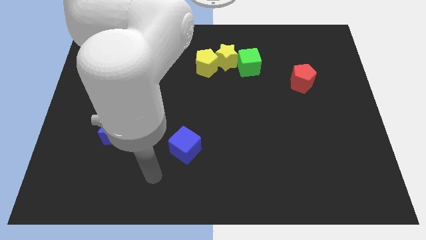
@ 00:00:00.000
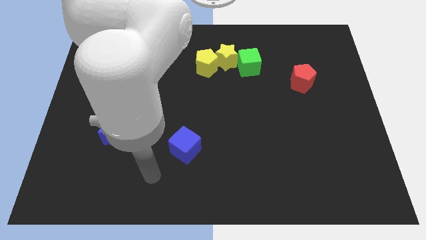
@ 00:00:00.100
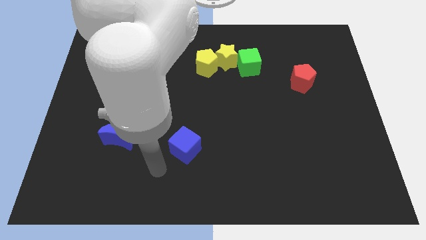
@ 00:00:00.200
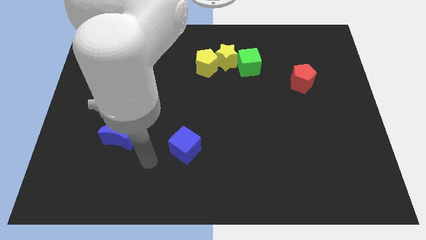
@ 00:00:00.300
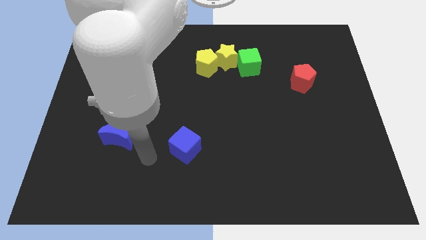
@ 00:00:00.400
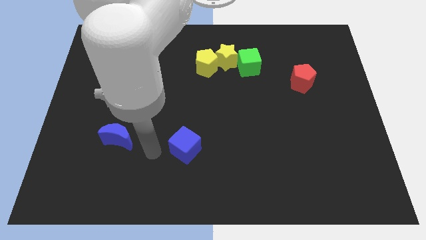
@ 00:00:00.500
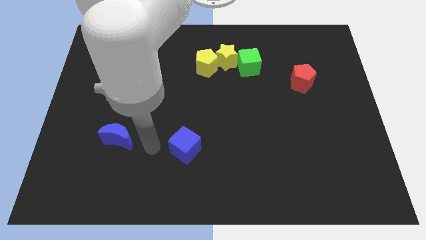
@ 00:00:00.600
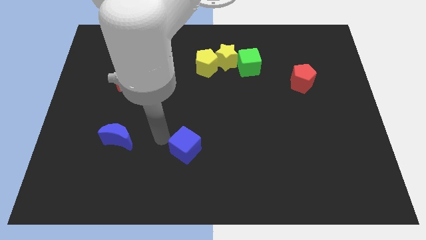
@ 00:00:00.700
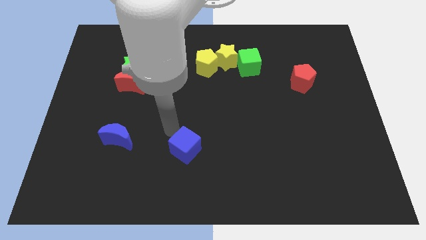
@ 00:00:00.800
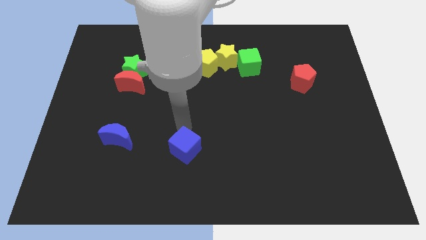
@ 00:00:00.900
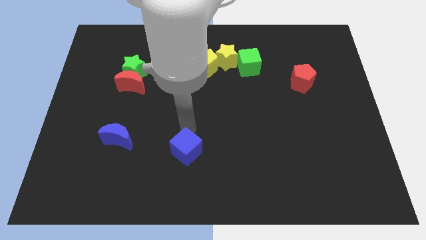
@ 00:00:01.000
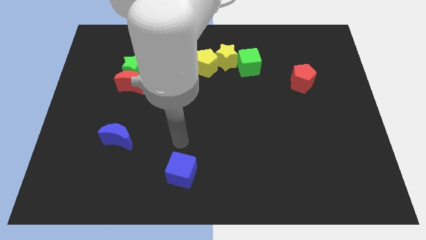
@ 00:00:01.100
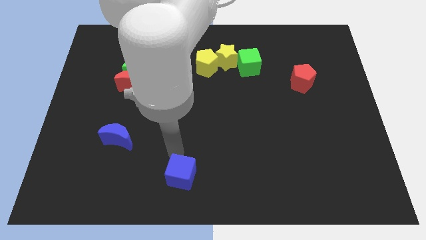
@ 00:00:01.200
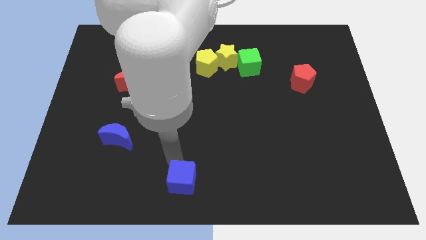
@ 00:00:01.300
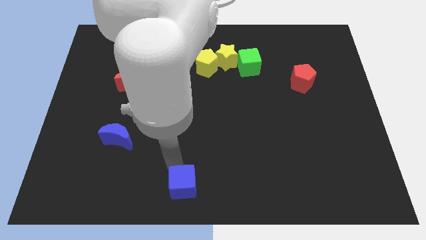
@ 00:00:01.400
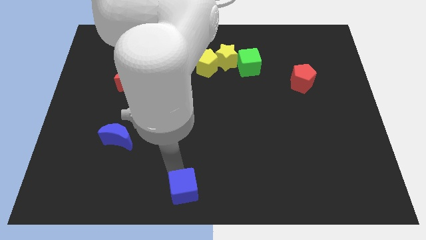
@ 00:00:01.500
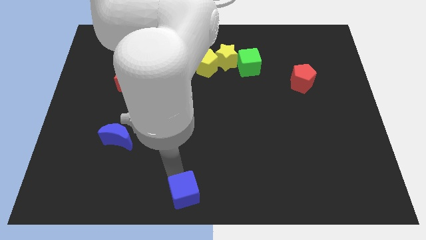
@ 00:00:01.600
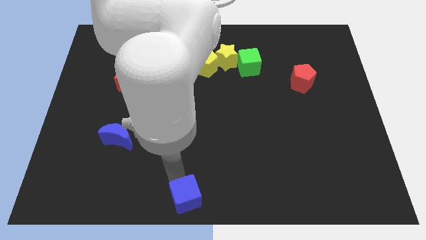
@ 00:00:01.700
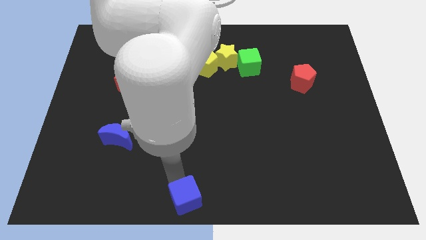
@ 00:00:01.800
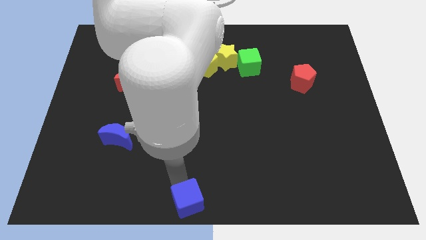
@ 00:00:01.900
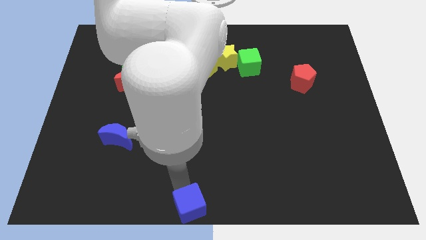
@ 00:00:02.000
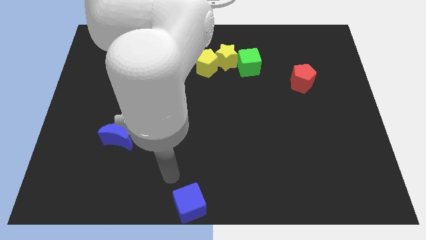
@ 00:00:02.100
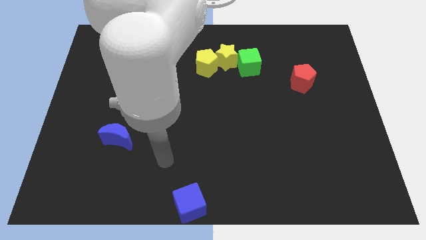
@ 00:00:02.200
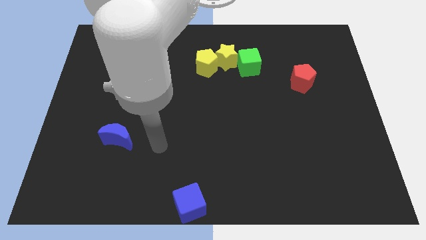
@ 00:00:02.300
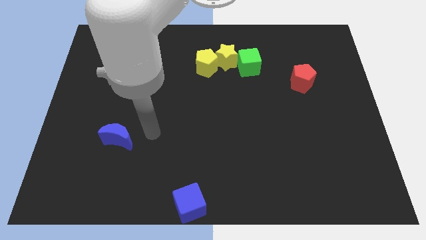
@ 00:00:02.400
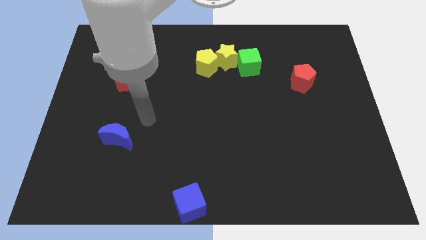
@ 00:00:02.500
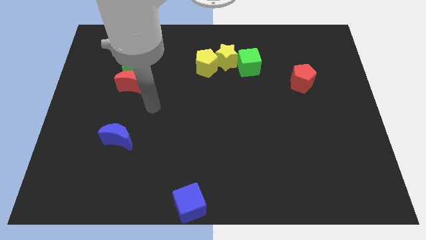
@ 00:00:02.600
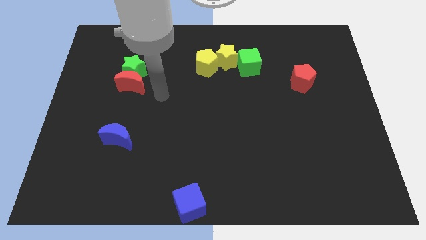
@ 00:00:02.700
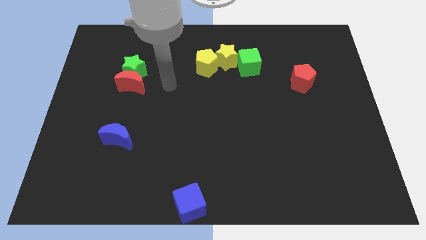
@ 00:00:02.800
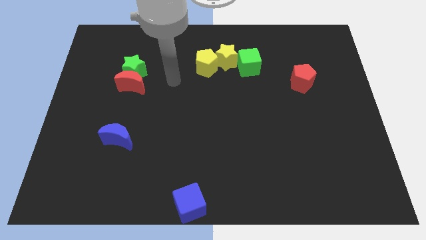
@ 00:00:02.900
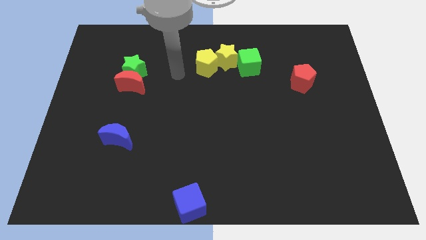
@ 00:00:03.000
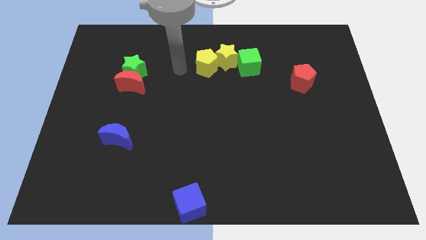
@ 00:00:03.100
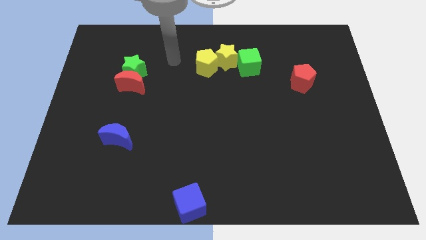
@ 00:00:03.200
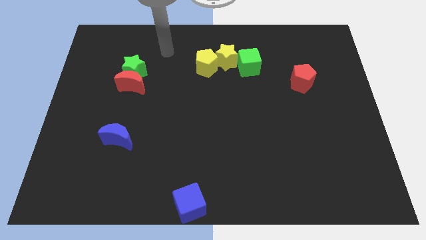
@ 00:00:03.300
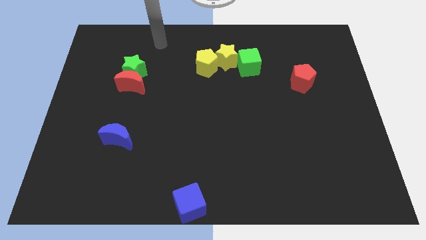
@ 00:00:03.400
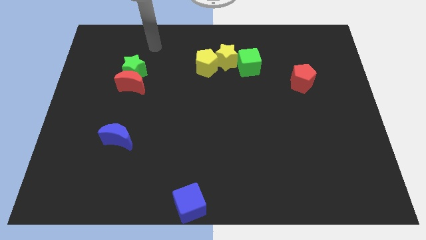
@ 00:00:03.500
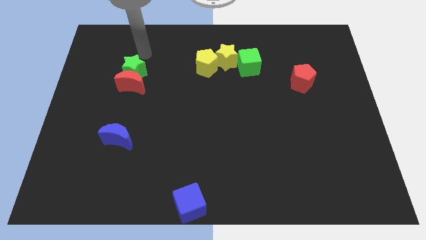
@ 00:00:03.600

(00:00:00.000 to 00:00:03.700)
push the blue cube down to the bottom center

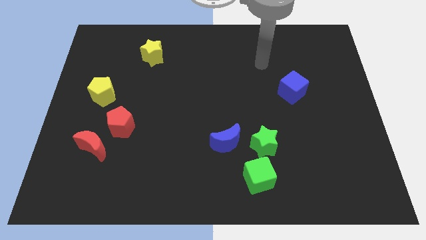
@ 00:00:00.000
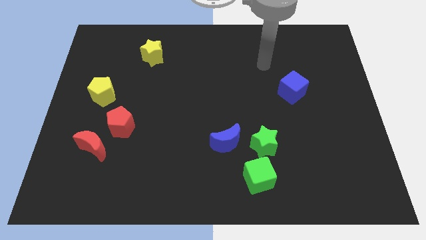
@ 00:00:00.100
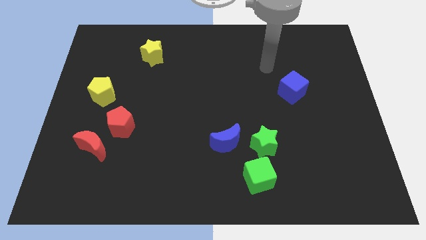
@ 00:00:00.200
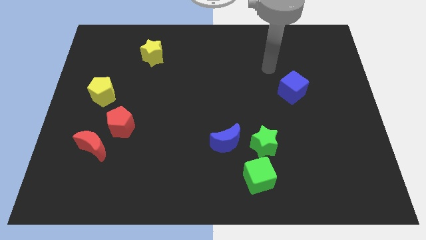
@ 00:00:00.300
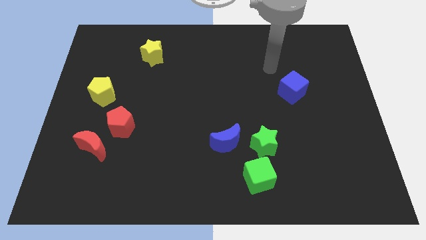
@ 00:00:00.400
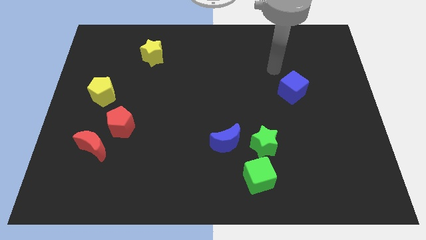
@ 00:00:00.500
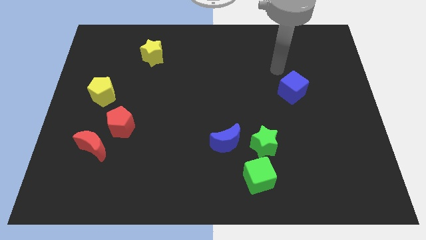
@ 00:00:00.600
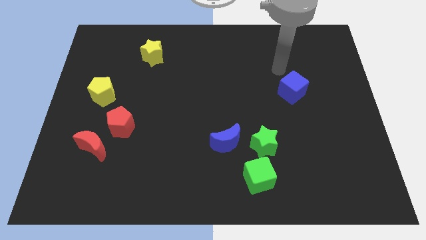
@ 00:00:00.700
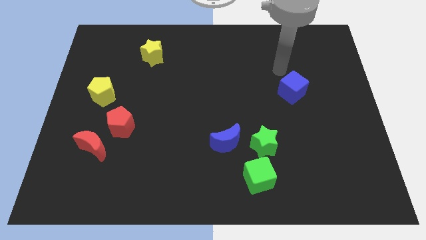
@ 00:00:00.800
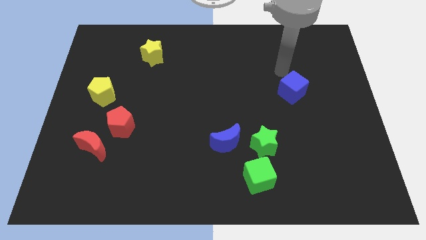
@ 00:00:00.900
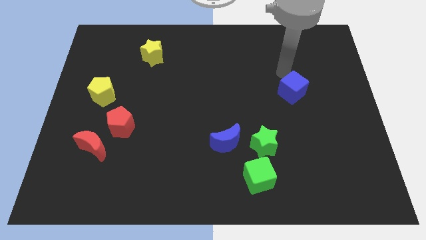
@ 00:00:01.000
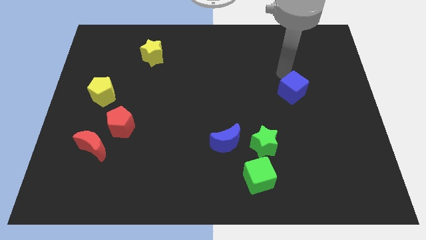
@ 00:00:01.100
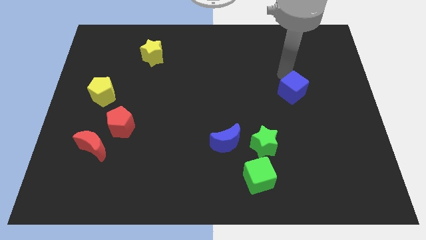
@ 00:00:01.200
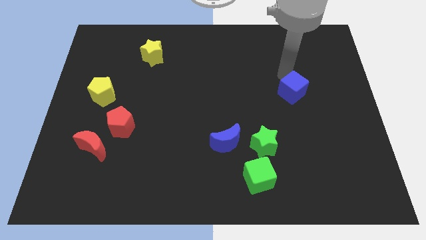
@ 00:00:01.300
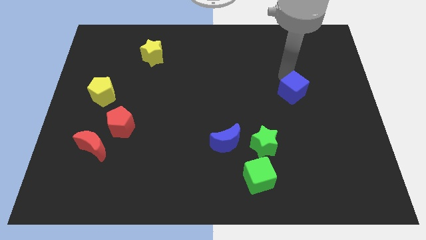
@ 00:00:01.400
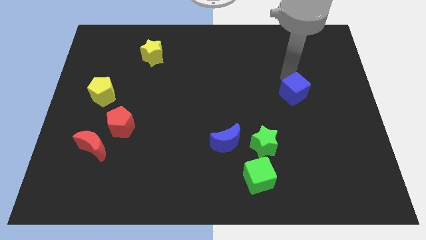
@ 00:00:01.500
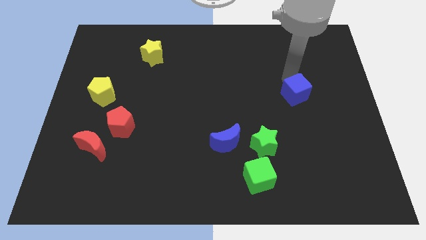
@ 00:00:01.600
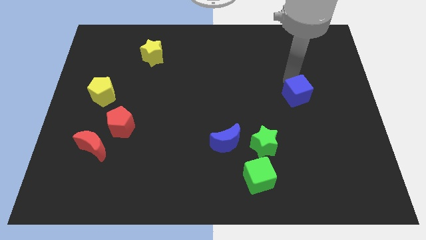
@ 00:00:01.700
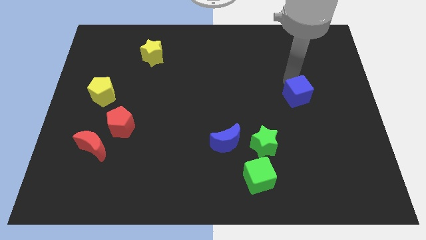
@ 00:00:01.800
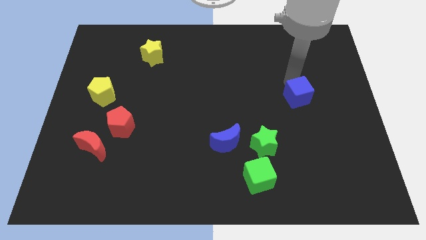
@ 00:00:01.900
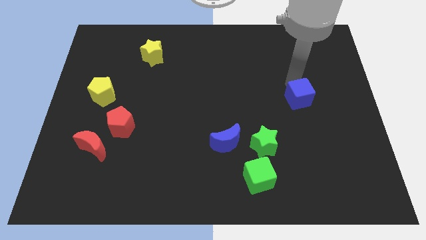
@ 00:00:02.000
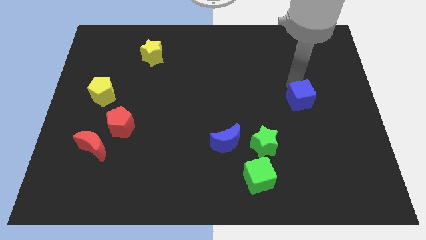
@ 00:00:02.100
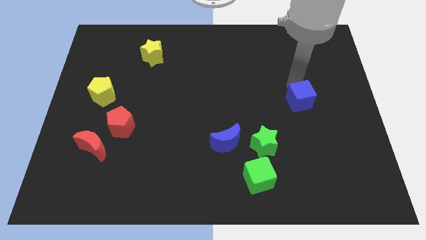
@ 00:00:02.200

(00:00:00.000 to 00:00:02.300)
push the blue cube slightly downwards

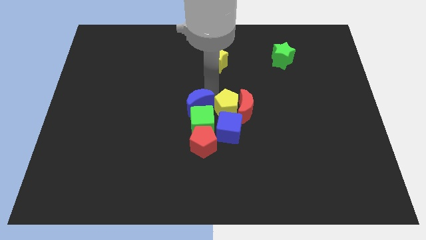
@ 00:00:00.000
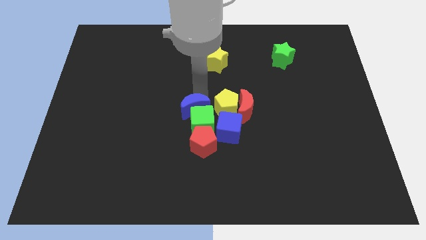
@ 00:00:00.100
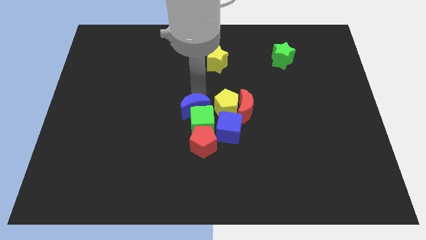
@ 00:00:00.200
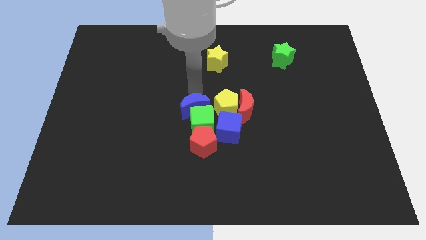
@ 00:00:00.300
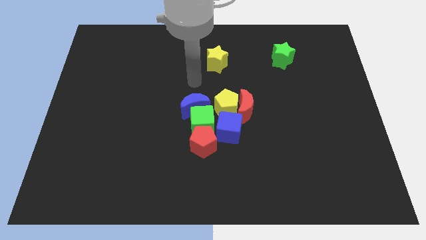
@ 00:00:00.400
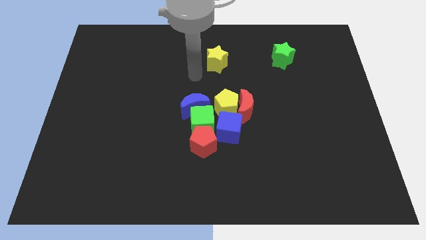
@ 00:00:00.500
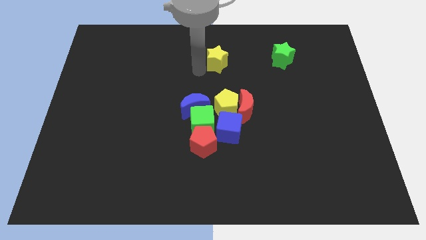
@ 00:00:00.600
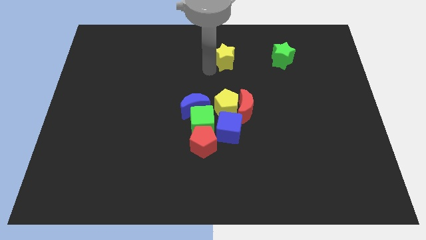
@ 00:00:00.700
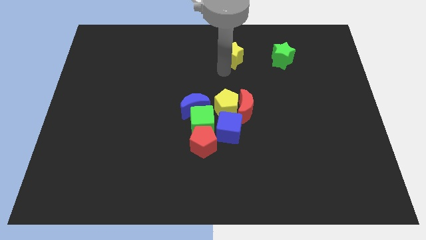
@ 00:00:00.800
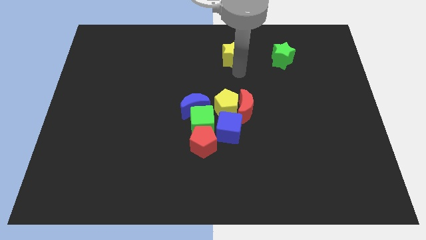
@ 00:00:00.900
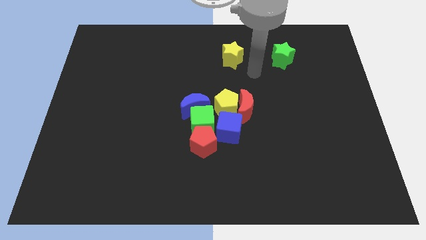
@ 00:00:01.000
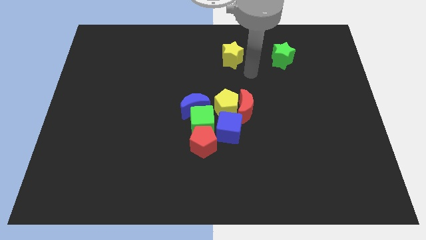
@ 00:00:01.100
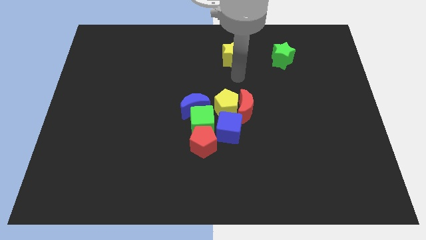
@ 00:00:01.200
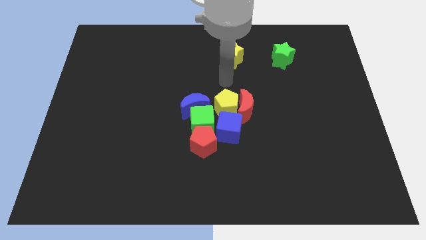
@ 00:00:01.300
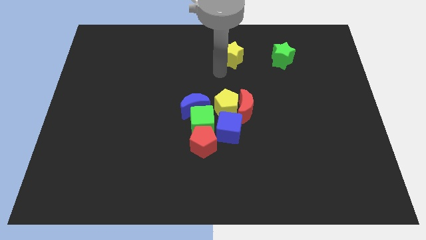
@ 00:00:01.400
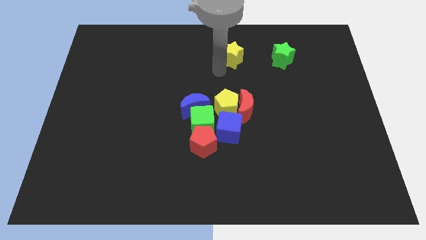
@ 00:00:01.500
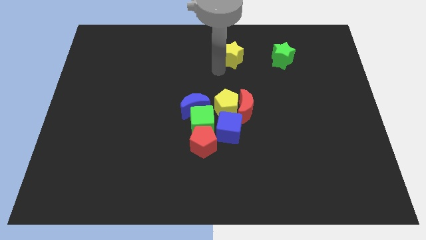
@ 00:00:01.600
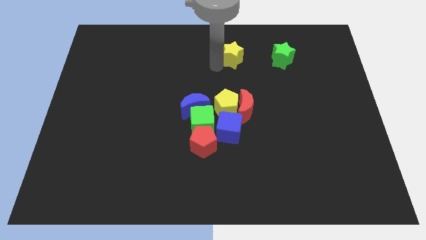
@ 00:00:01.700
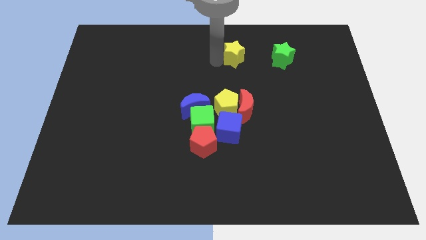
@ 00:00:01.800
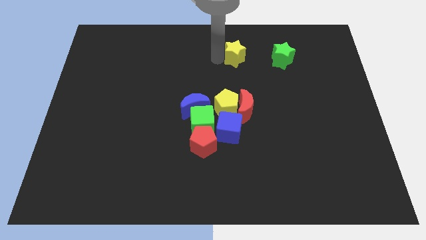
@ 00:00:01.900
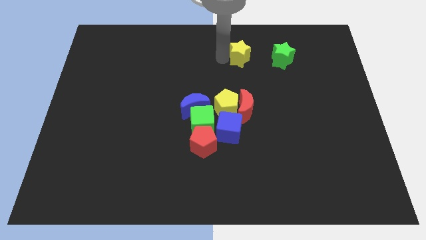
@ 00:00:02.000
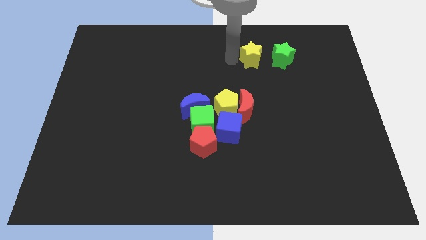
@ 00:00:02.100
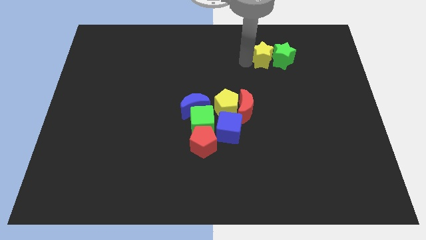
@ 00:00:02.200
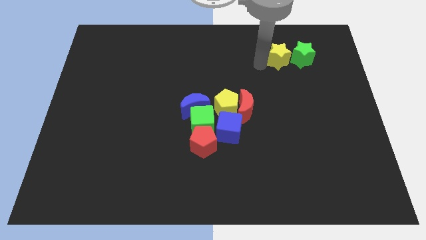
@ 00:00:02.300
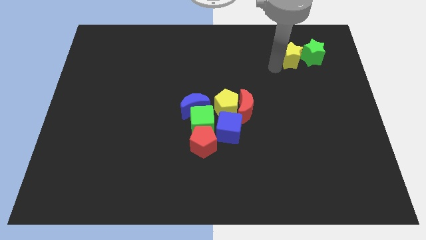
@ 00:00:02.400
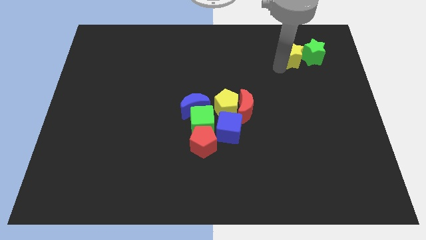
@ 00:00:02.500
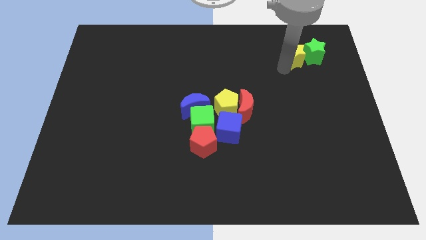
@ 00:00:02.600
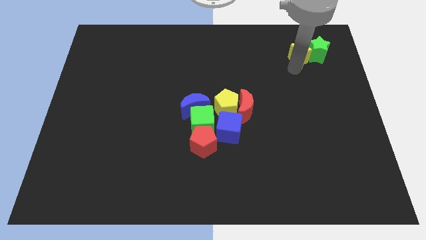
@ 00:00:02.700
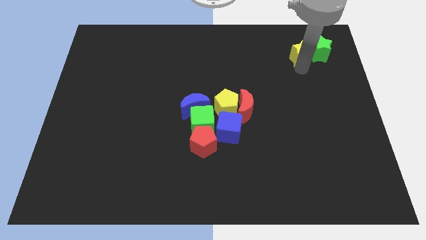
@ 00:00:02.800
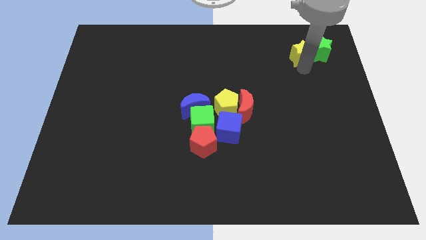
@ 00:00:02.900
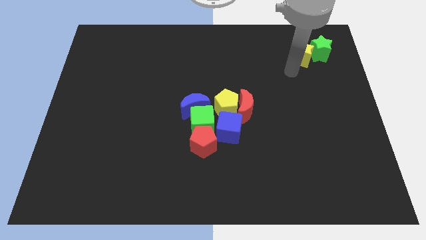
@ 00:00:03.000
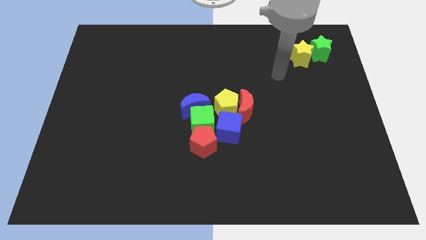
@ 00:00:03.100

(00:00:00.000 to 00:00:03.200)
push the yellow star into the green star
